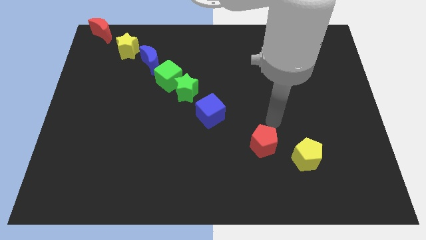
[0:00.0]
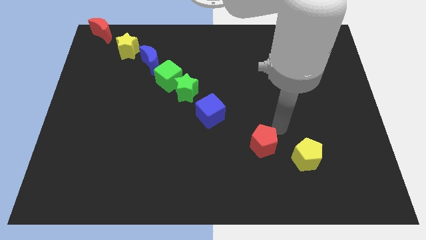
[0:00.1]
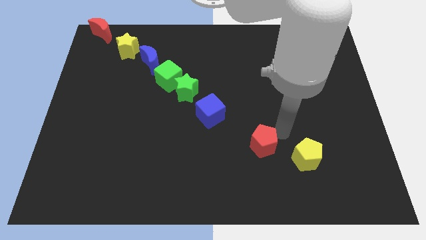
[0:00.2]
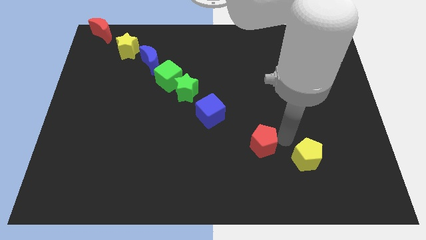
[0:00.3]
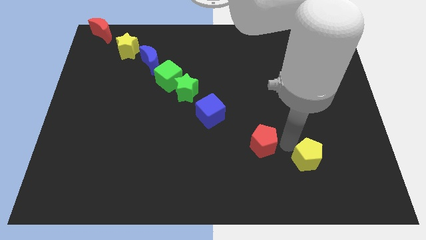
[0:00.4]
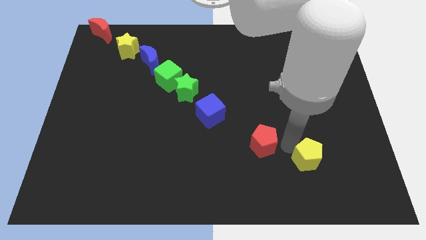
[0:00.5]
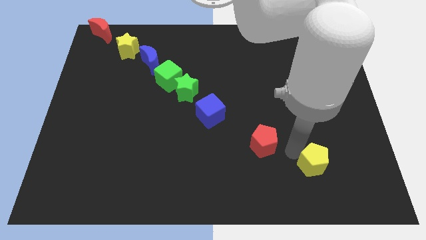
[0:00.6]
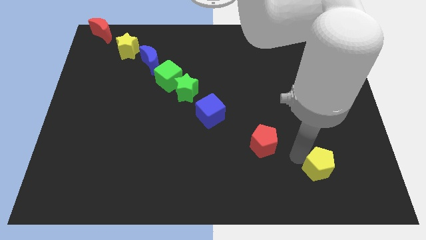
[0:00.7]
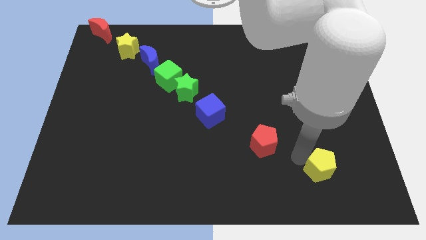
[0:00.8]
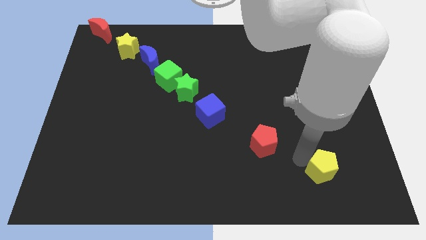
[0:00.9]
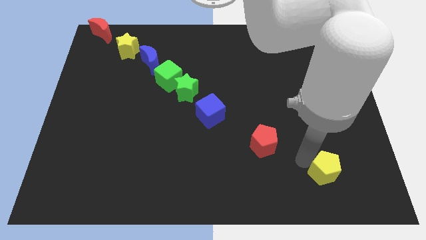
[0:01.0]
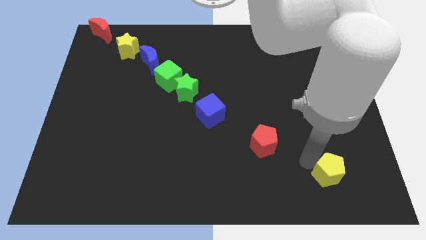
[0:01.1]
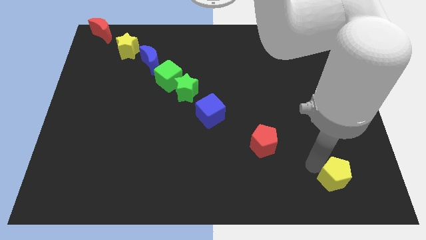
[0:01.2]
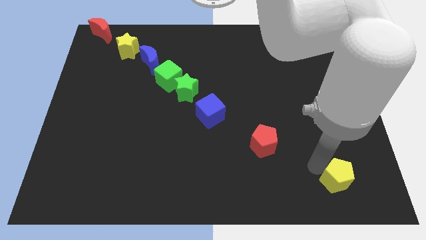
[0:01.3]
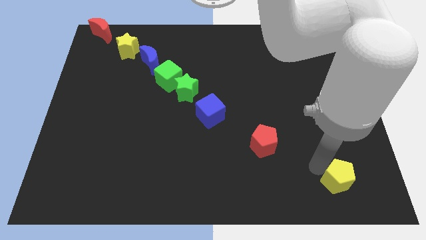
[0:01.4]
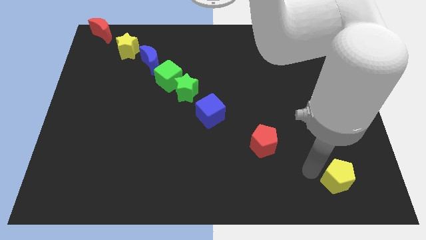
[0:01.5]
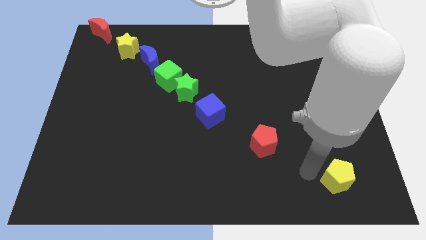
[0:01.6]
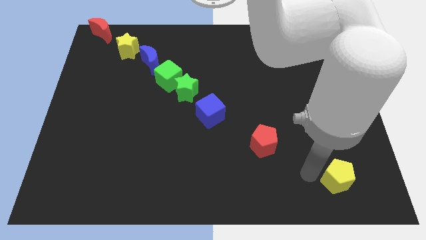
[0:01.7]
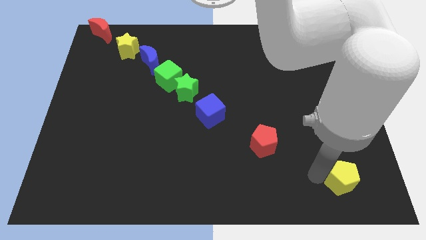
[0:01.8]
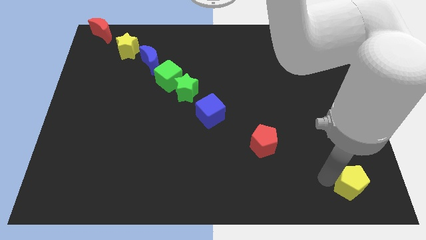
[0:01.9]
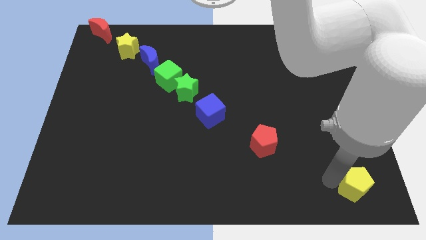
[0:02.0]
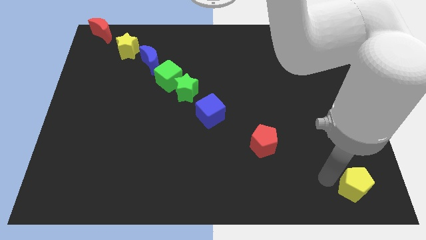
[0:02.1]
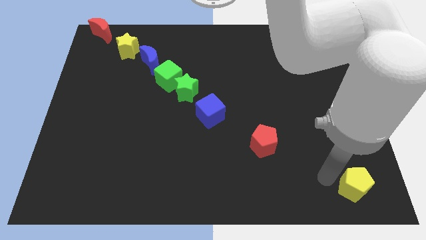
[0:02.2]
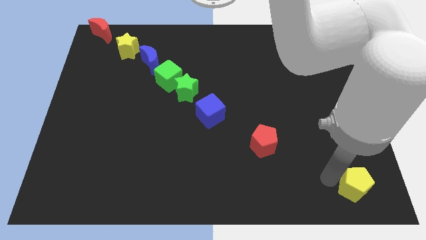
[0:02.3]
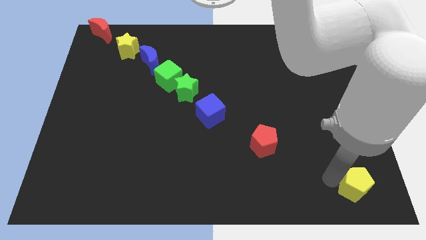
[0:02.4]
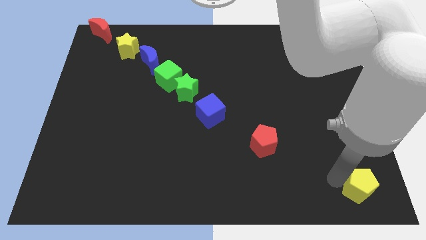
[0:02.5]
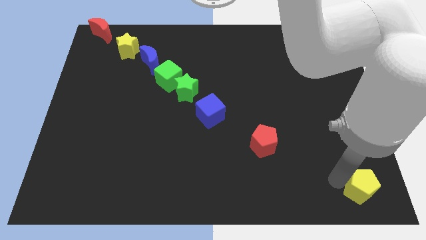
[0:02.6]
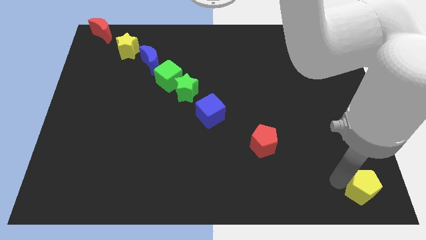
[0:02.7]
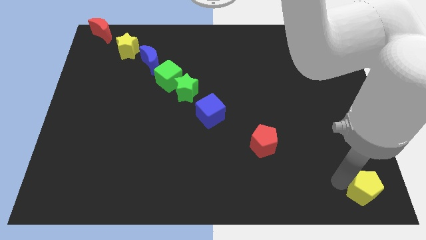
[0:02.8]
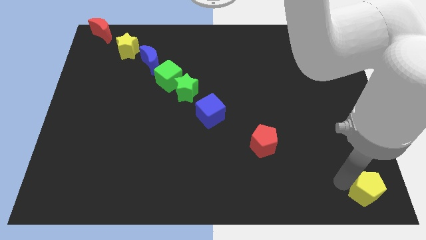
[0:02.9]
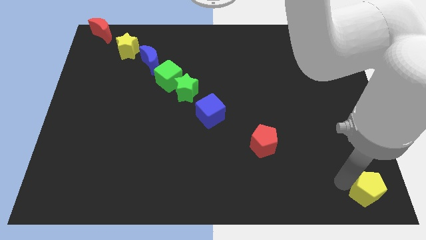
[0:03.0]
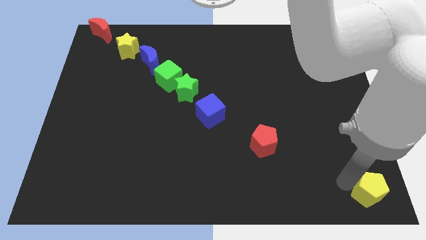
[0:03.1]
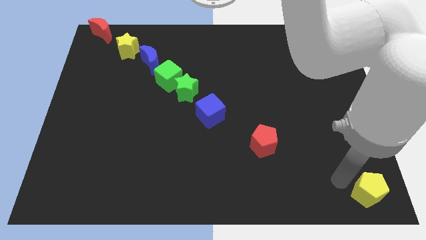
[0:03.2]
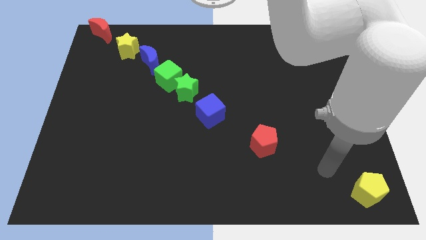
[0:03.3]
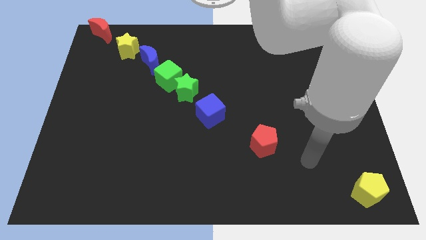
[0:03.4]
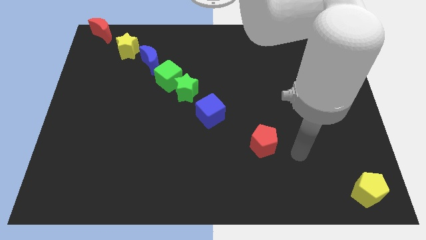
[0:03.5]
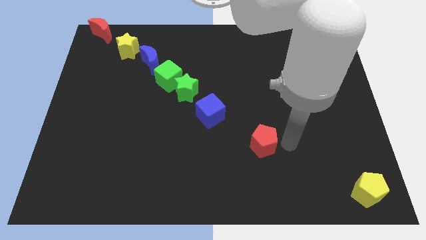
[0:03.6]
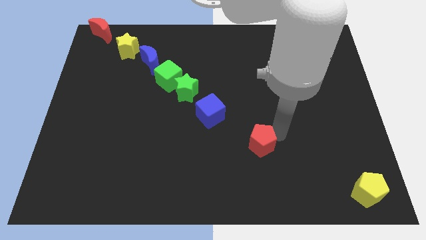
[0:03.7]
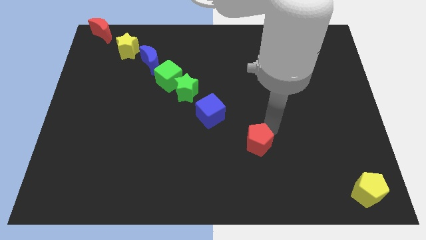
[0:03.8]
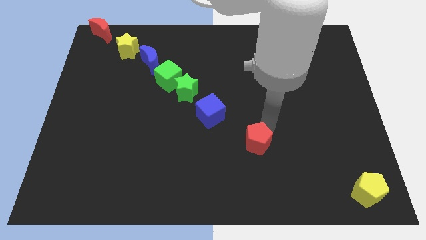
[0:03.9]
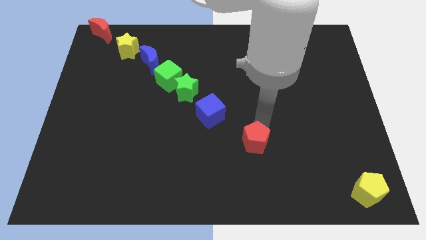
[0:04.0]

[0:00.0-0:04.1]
move yellow pentagon to the bottom right corner

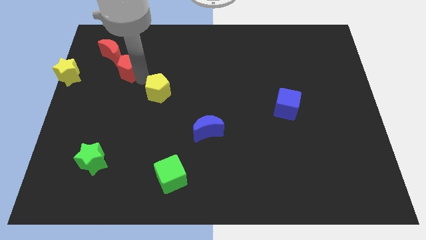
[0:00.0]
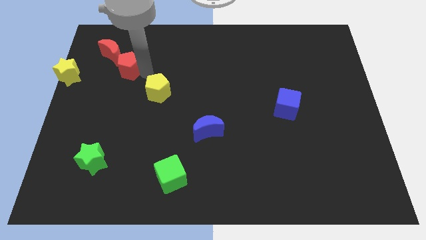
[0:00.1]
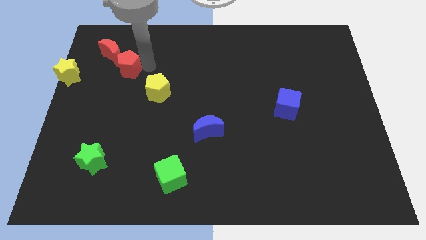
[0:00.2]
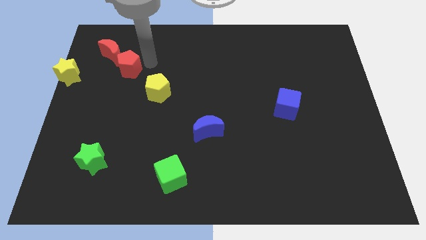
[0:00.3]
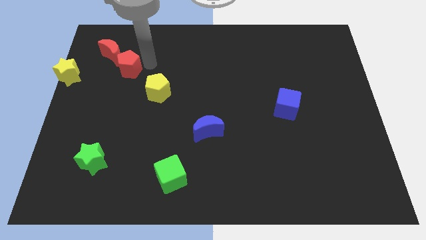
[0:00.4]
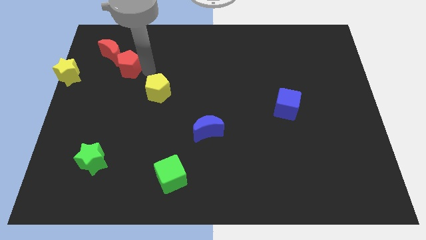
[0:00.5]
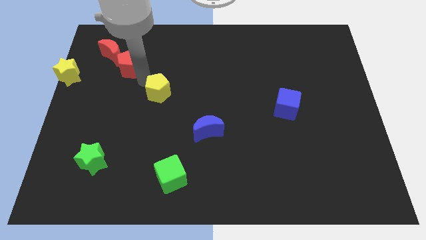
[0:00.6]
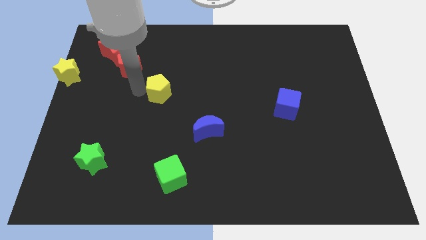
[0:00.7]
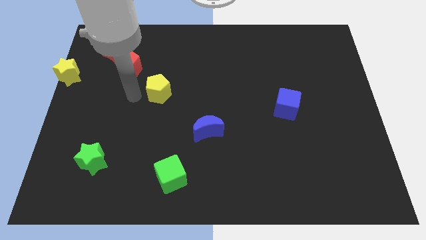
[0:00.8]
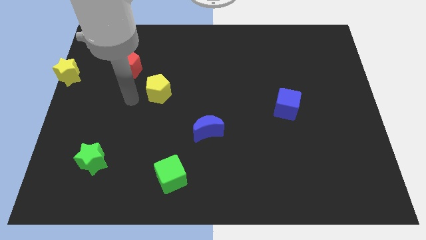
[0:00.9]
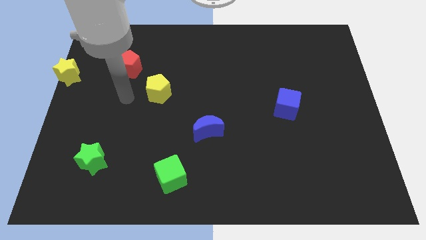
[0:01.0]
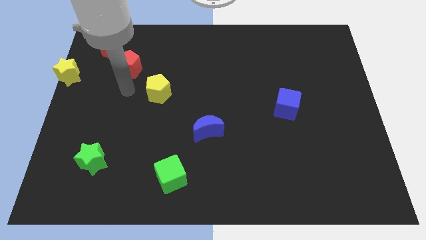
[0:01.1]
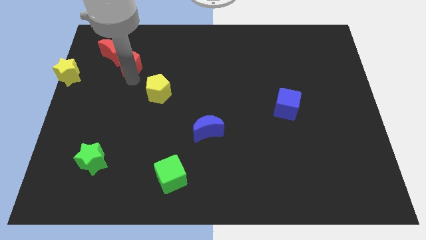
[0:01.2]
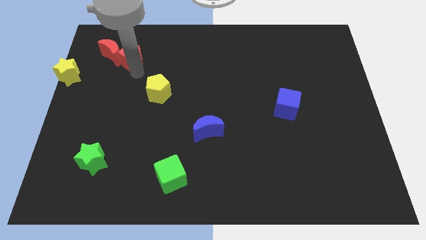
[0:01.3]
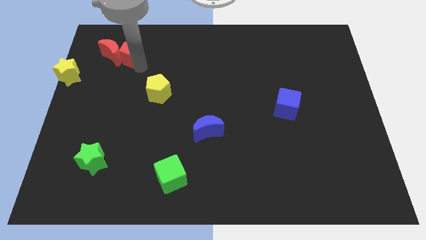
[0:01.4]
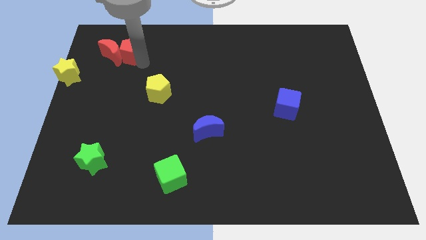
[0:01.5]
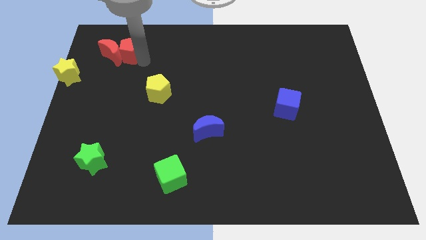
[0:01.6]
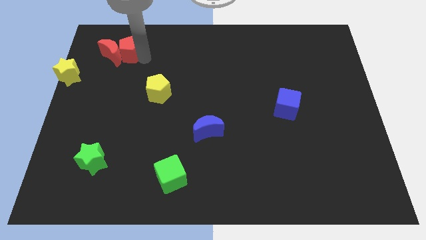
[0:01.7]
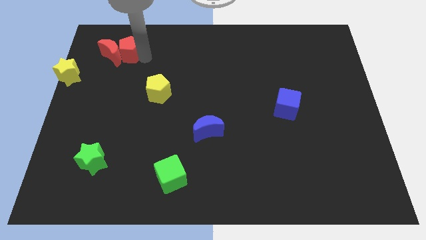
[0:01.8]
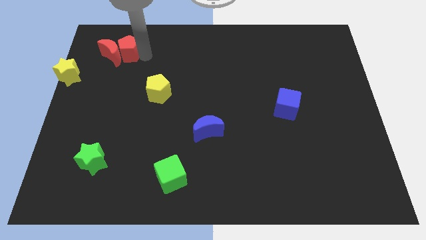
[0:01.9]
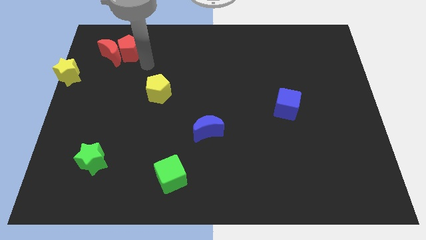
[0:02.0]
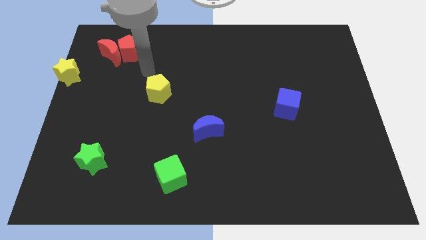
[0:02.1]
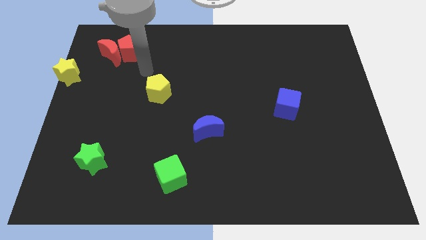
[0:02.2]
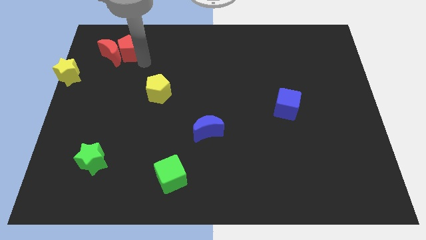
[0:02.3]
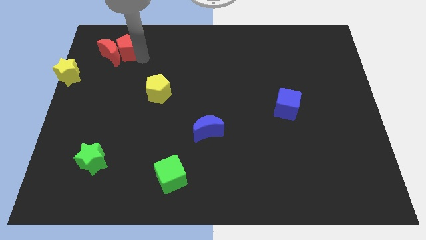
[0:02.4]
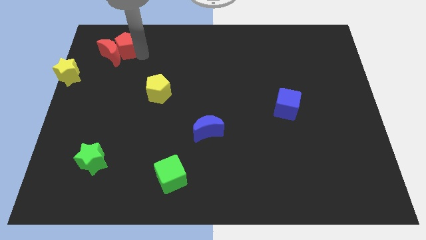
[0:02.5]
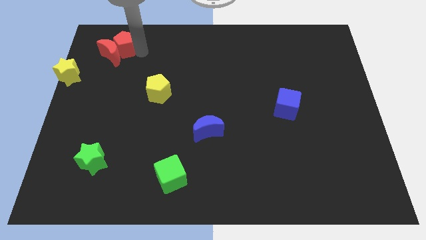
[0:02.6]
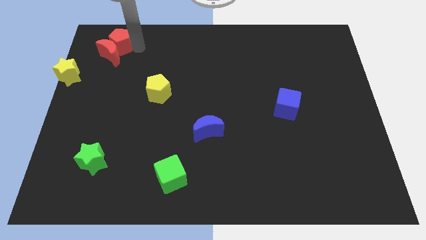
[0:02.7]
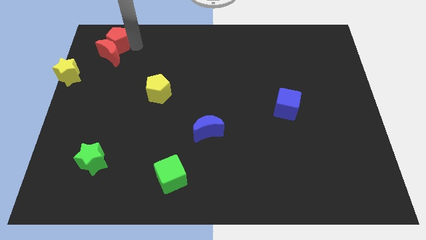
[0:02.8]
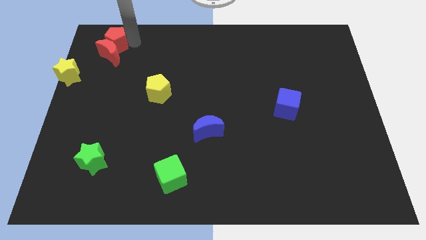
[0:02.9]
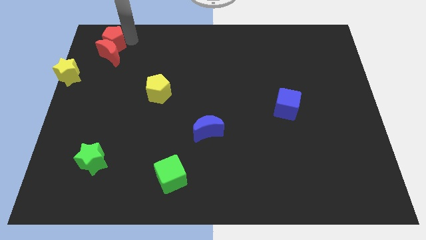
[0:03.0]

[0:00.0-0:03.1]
place red pentagon on the top of red moon

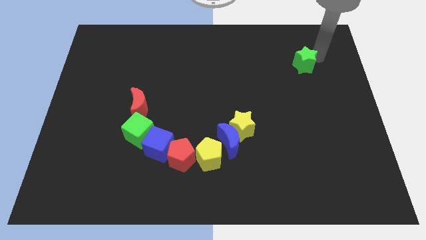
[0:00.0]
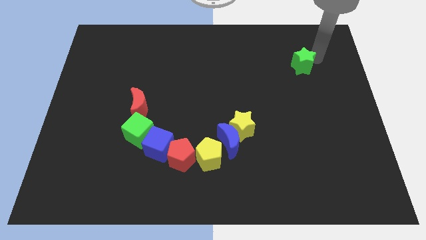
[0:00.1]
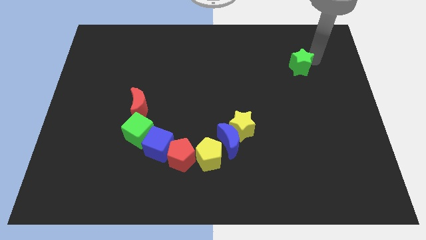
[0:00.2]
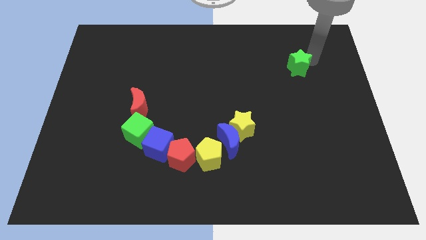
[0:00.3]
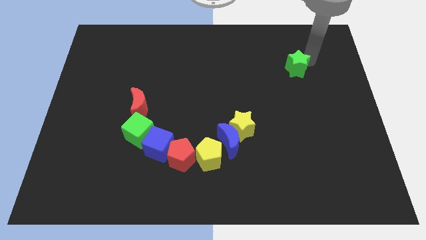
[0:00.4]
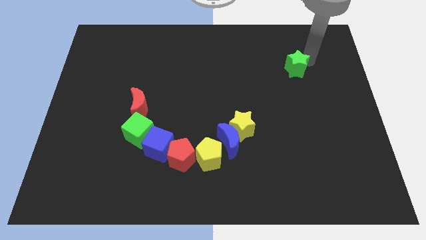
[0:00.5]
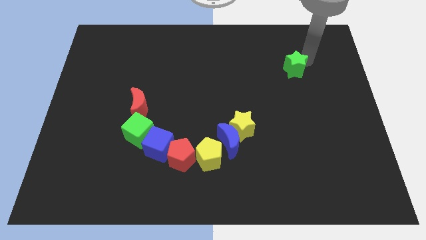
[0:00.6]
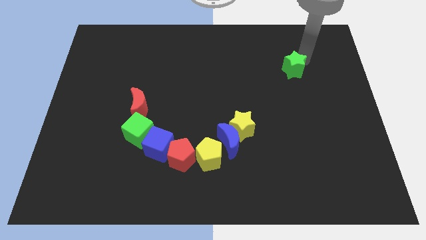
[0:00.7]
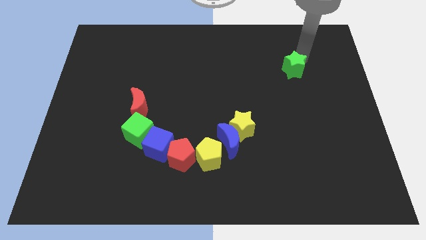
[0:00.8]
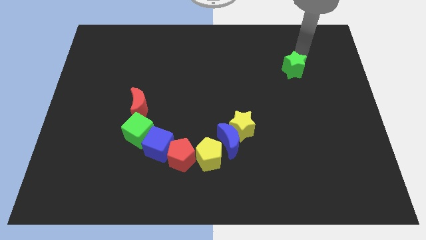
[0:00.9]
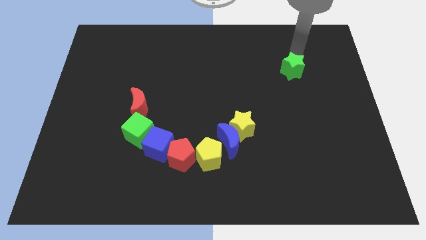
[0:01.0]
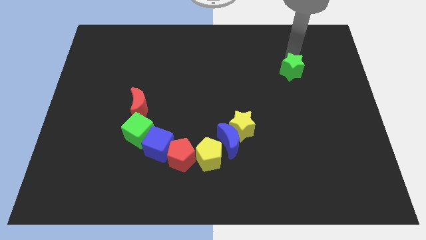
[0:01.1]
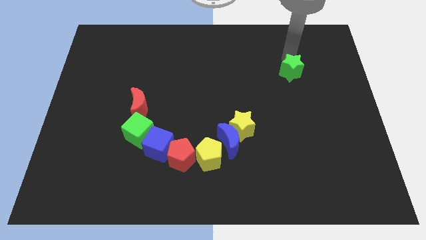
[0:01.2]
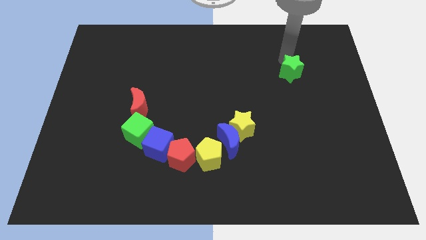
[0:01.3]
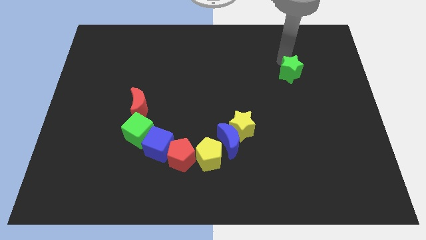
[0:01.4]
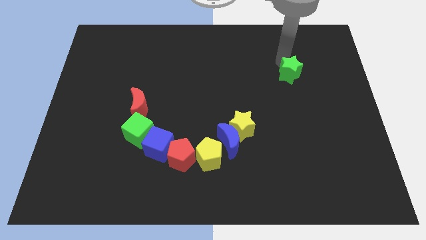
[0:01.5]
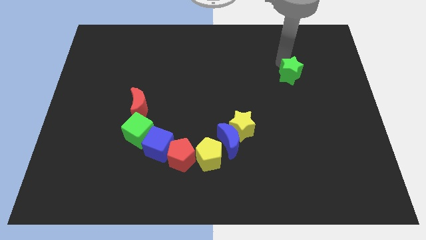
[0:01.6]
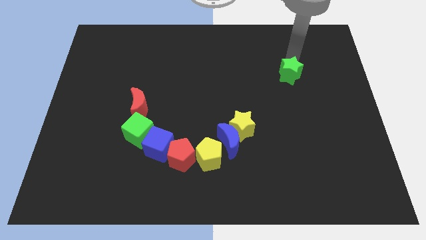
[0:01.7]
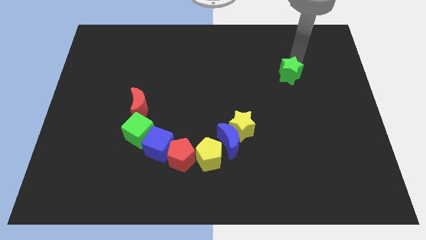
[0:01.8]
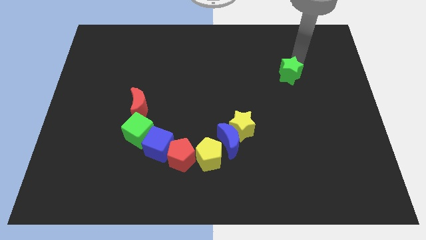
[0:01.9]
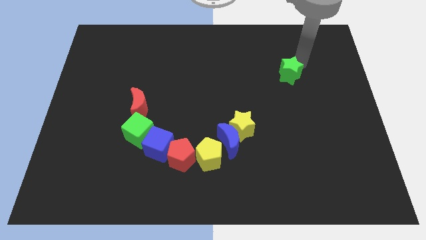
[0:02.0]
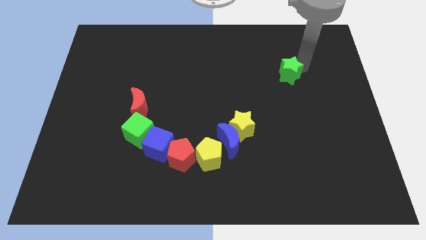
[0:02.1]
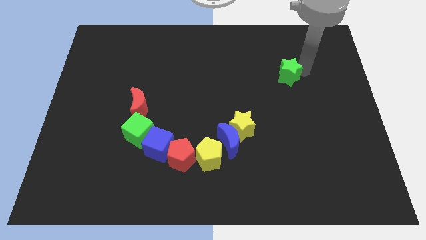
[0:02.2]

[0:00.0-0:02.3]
move the green star towards the yellow star
